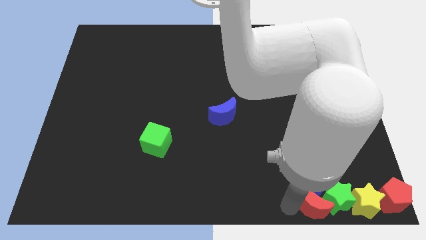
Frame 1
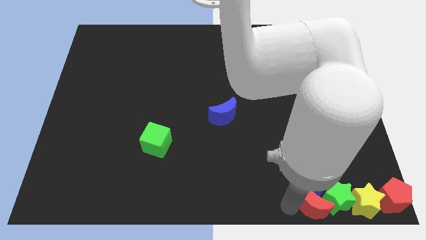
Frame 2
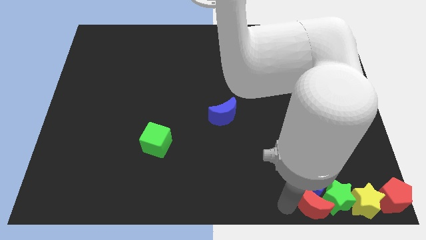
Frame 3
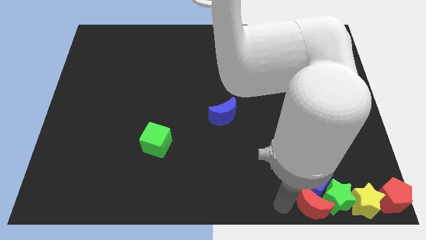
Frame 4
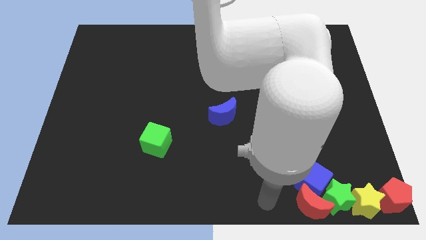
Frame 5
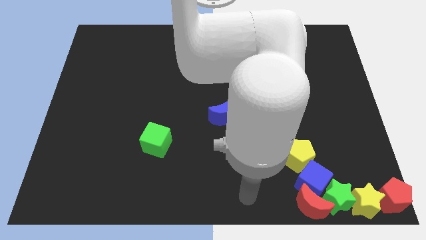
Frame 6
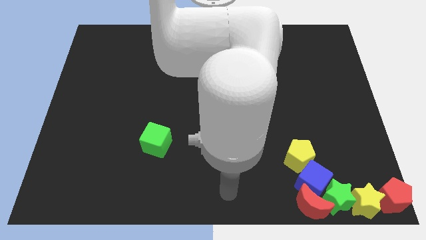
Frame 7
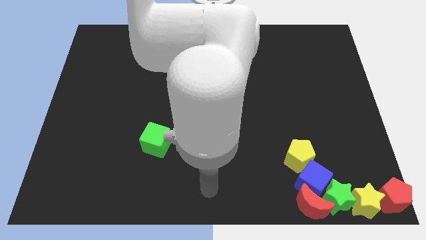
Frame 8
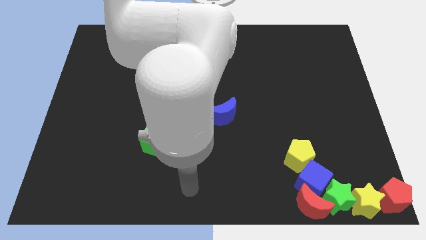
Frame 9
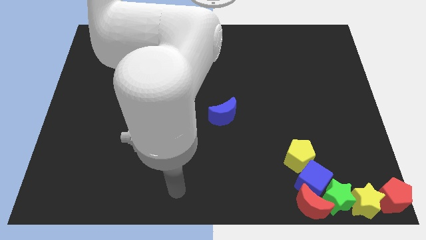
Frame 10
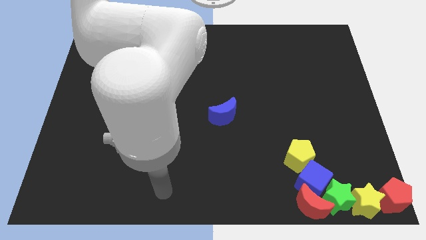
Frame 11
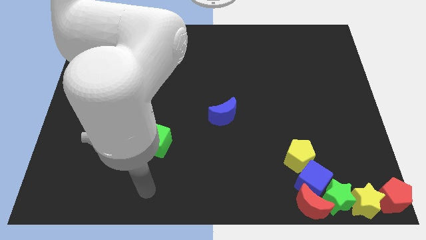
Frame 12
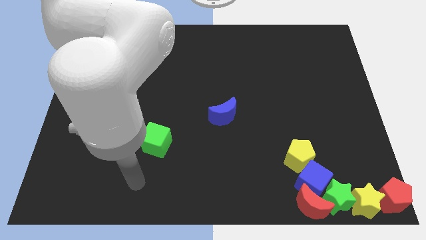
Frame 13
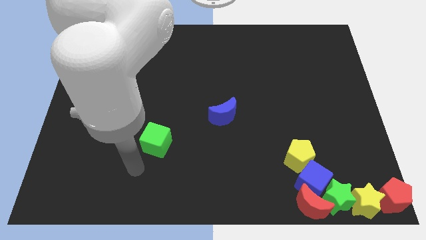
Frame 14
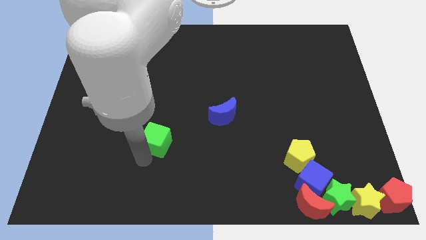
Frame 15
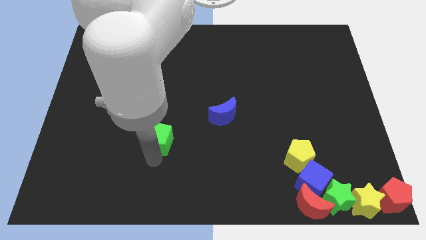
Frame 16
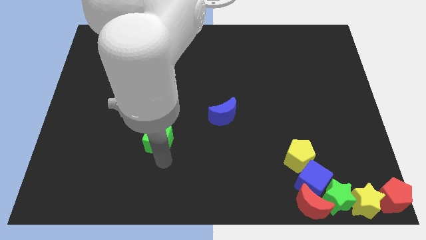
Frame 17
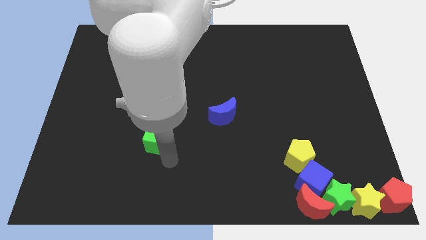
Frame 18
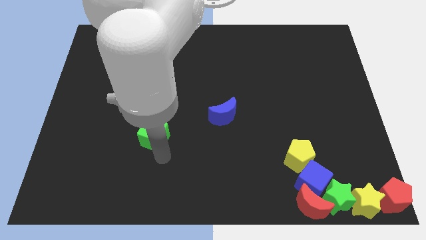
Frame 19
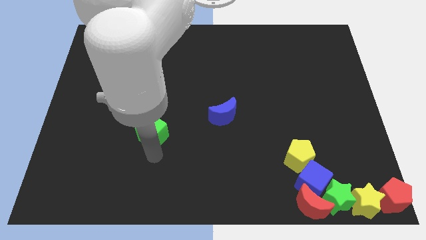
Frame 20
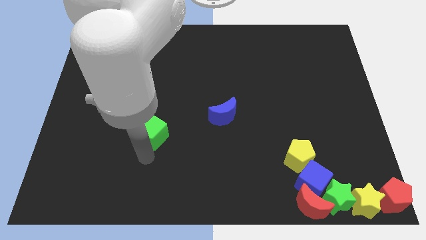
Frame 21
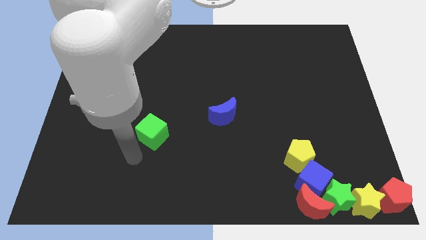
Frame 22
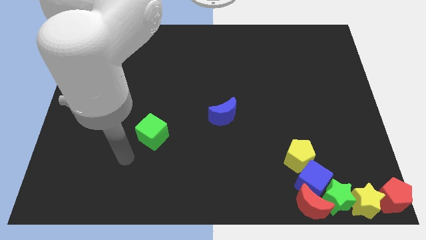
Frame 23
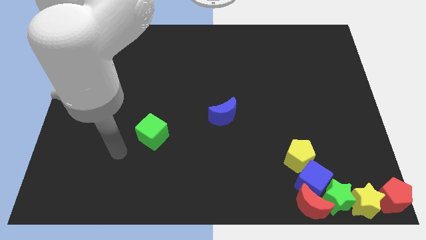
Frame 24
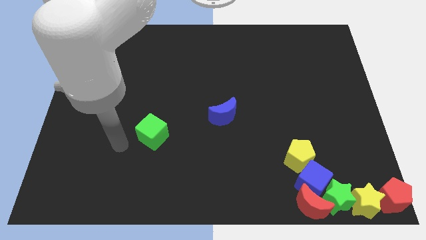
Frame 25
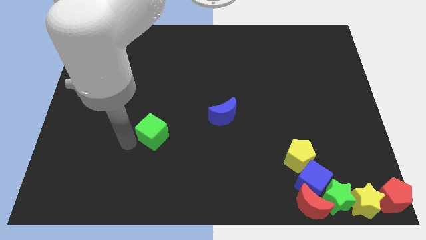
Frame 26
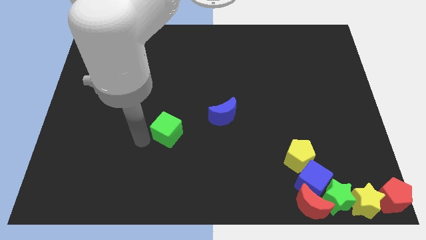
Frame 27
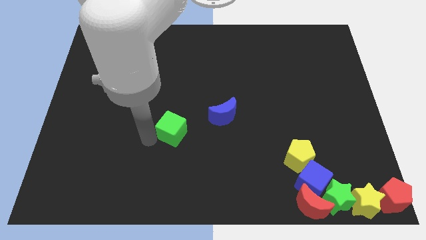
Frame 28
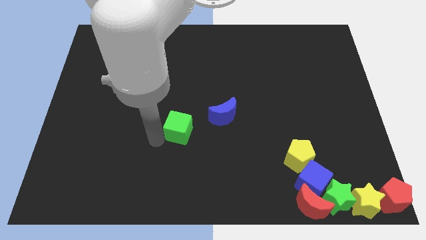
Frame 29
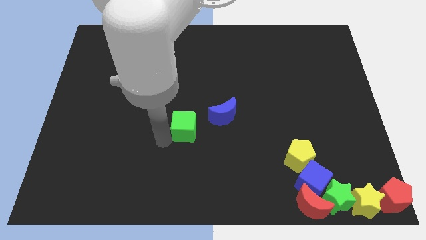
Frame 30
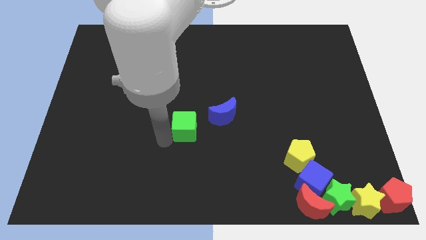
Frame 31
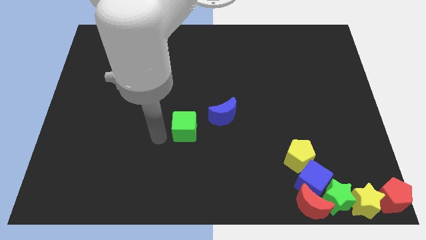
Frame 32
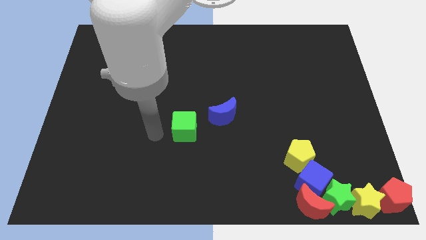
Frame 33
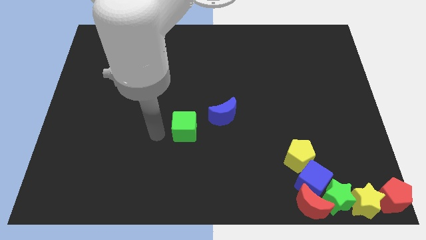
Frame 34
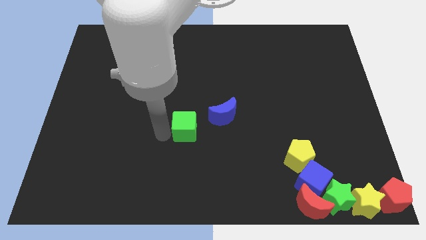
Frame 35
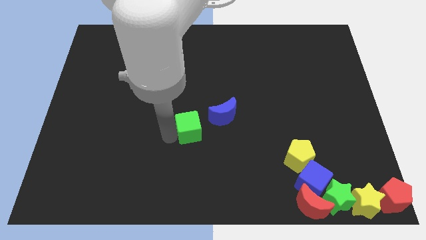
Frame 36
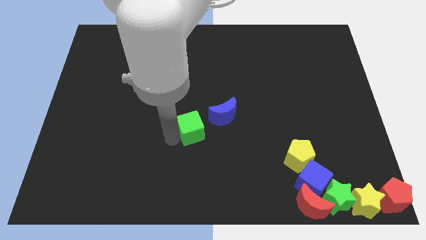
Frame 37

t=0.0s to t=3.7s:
push the green cube to the center of the board

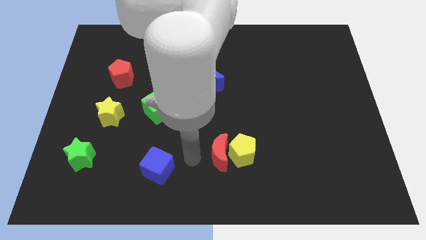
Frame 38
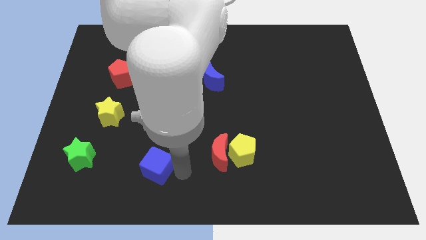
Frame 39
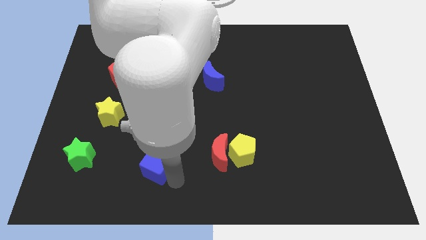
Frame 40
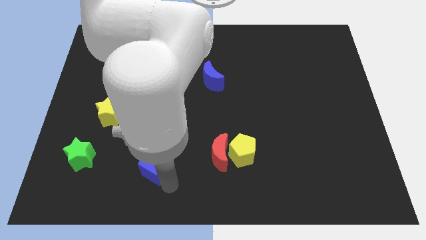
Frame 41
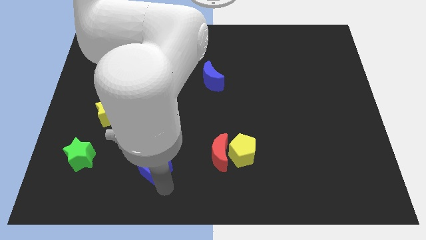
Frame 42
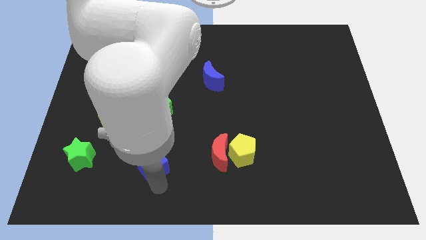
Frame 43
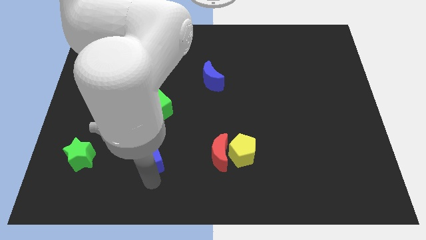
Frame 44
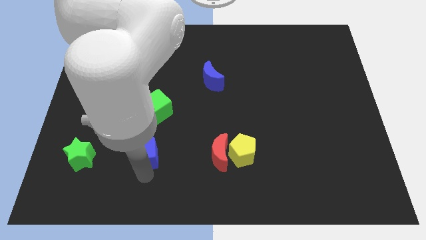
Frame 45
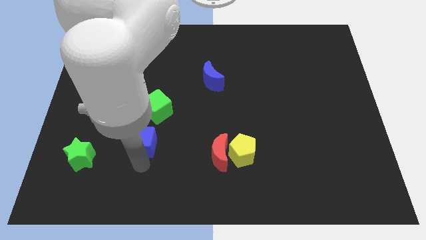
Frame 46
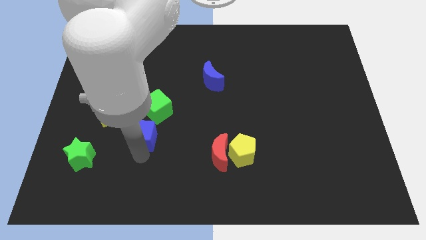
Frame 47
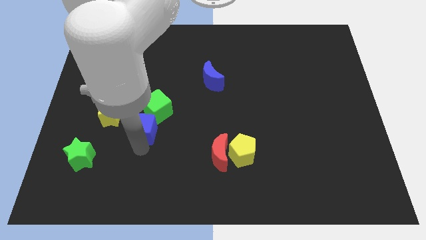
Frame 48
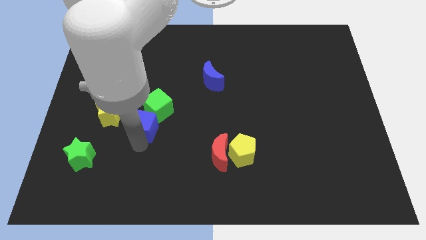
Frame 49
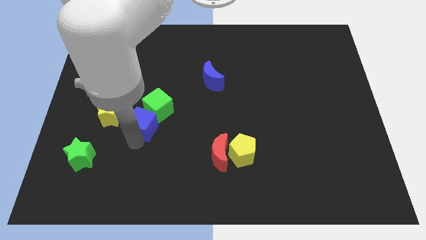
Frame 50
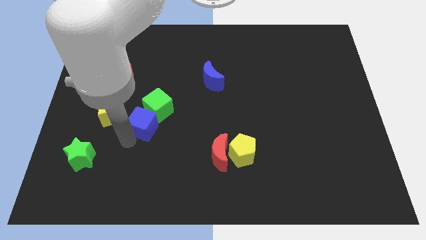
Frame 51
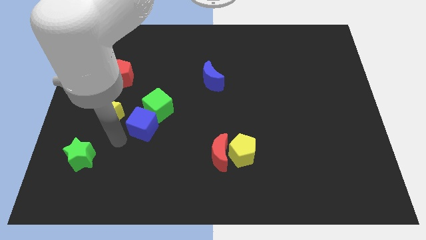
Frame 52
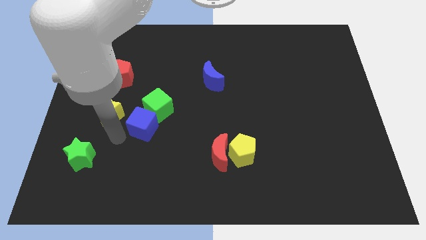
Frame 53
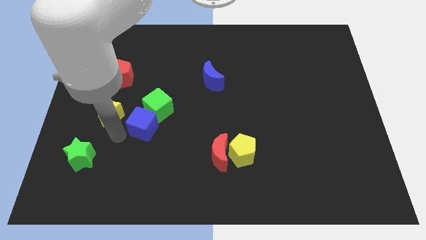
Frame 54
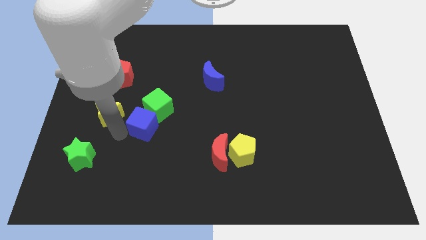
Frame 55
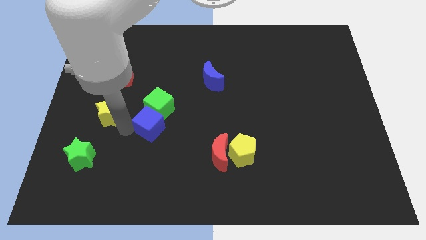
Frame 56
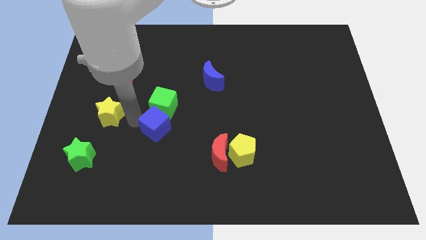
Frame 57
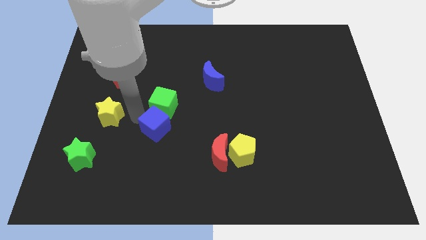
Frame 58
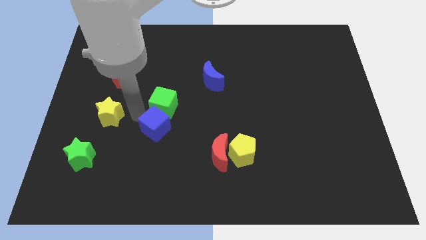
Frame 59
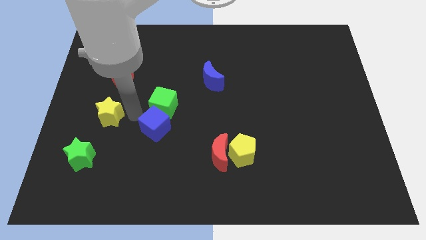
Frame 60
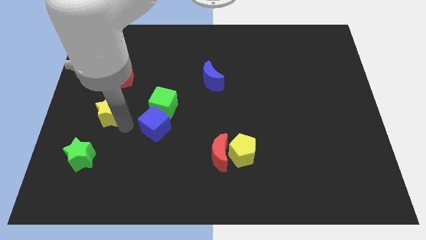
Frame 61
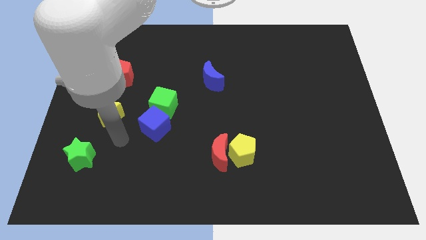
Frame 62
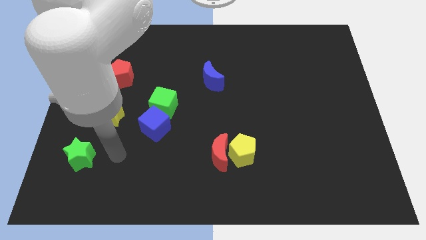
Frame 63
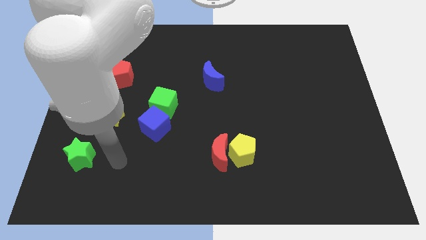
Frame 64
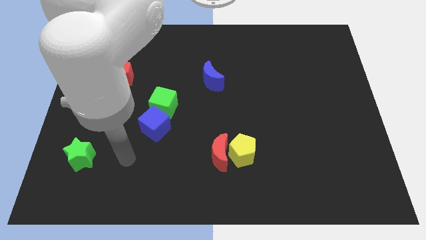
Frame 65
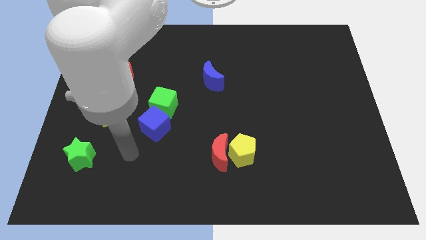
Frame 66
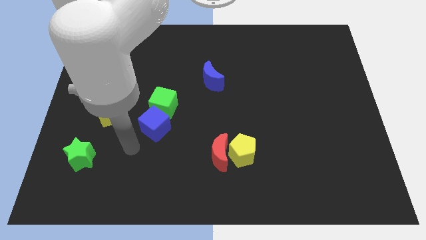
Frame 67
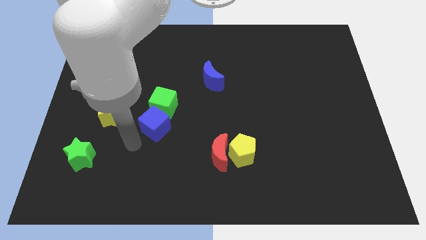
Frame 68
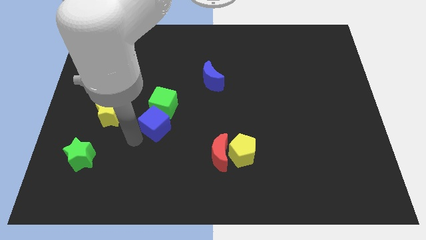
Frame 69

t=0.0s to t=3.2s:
push blue cube into the green cube

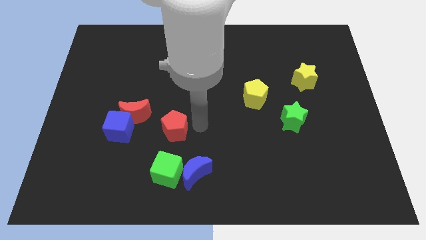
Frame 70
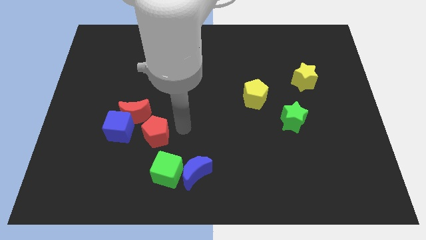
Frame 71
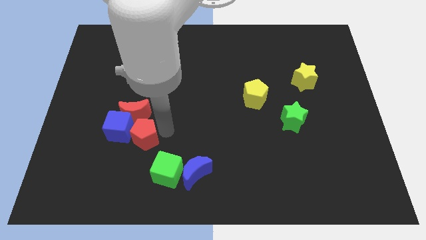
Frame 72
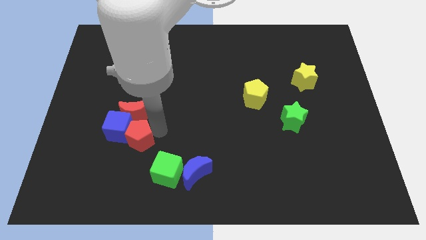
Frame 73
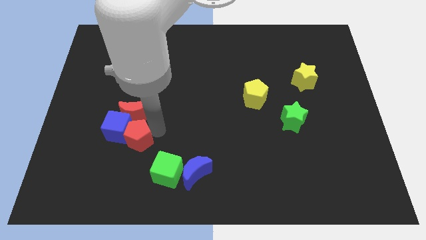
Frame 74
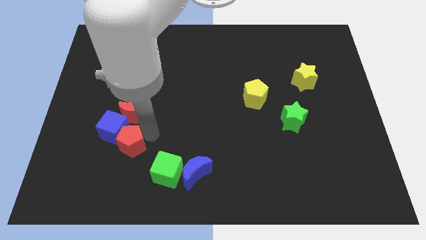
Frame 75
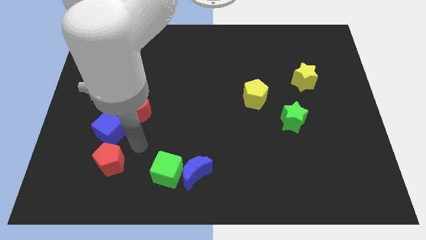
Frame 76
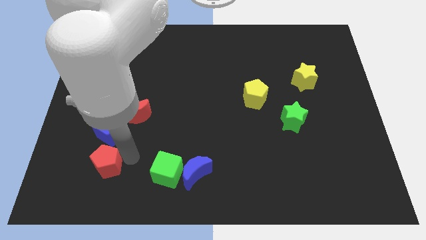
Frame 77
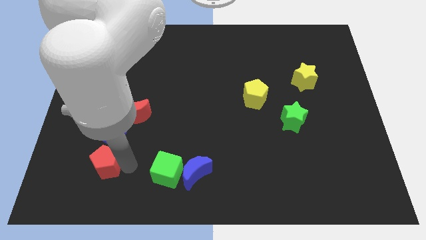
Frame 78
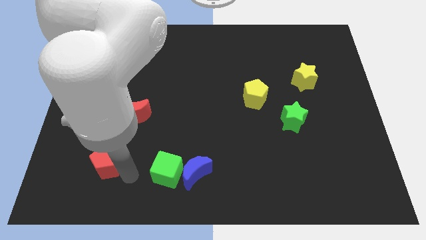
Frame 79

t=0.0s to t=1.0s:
push the red pentagon into the blue cube

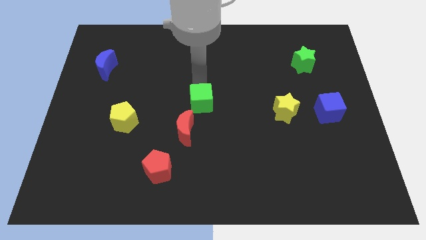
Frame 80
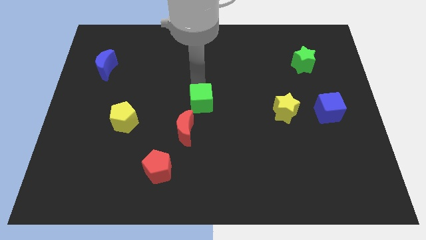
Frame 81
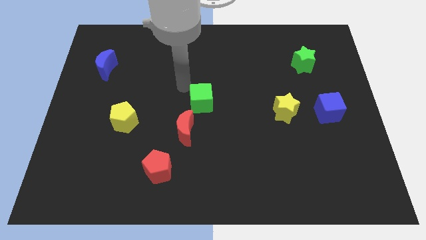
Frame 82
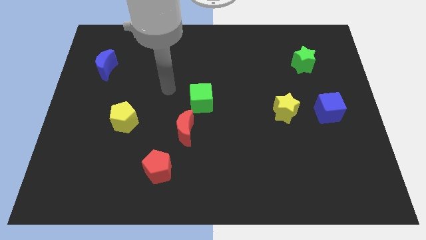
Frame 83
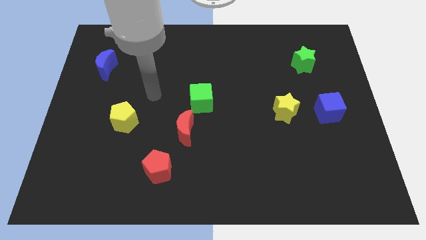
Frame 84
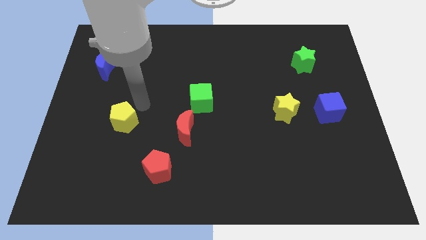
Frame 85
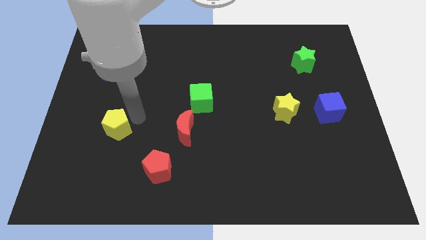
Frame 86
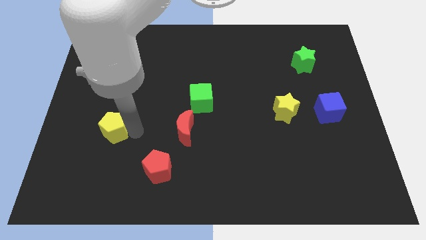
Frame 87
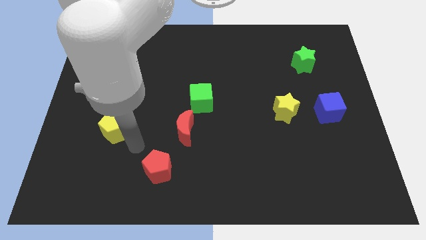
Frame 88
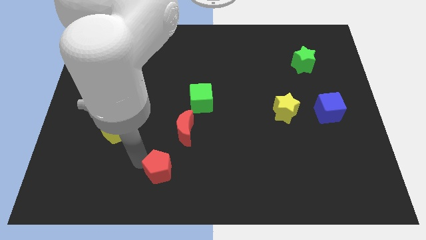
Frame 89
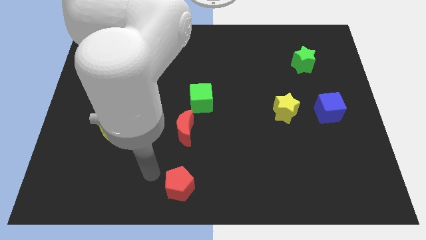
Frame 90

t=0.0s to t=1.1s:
move the yellow pentagon slightly towards the bottom
